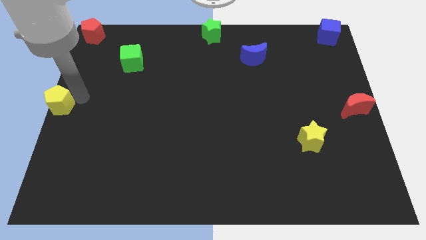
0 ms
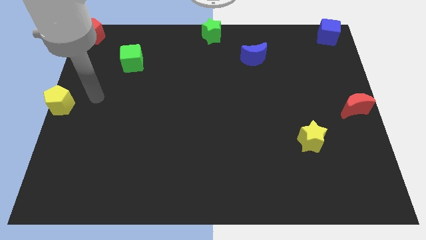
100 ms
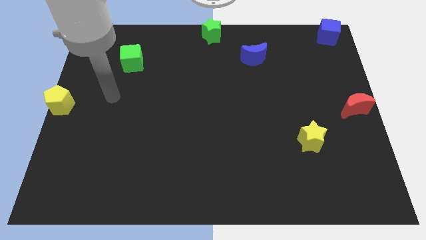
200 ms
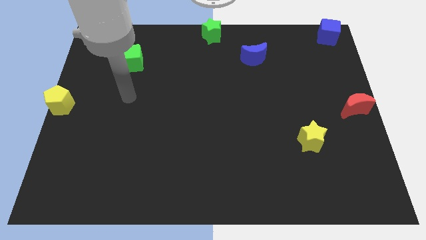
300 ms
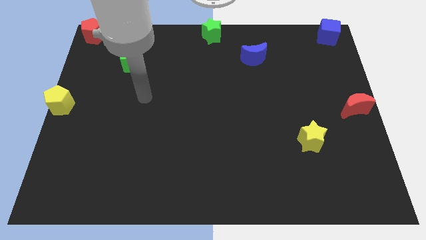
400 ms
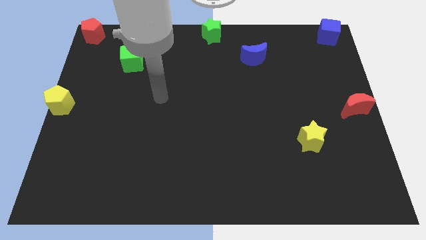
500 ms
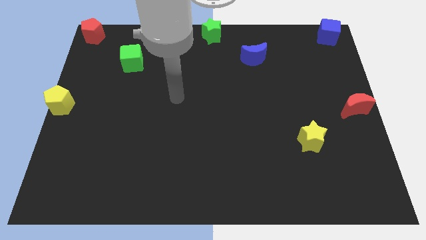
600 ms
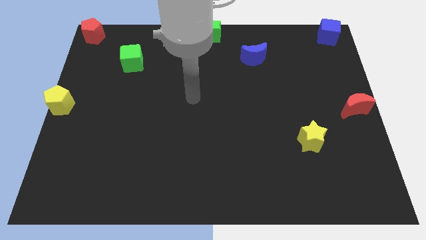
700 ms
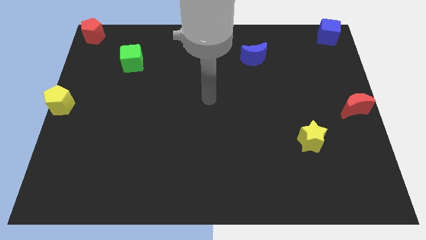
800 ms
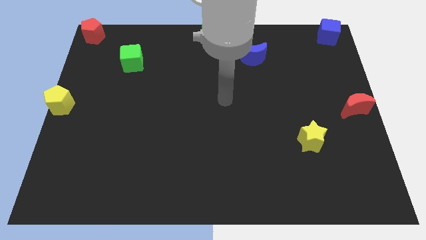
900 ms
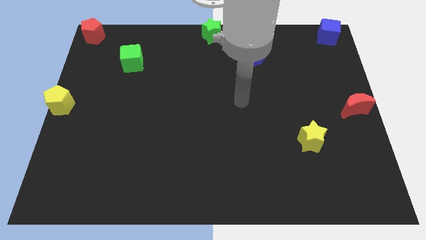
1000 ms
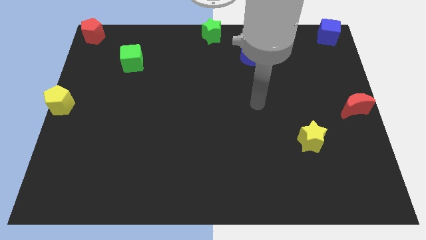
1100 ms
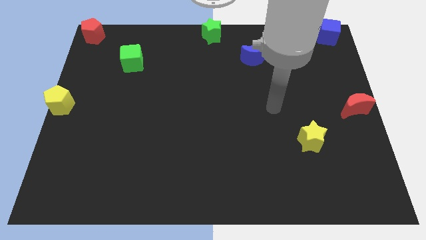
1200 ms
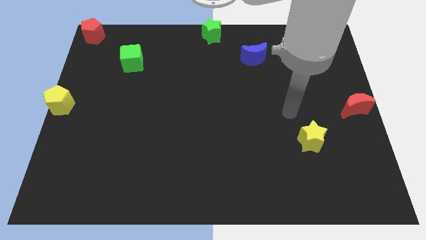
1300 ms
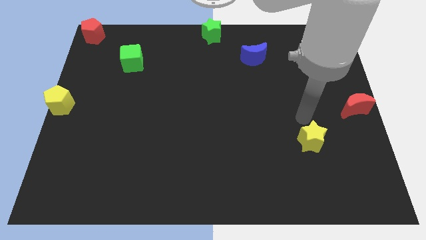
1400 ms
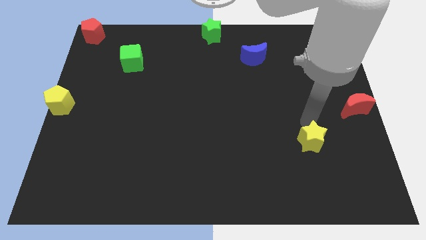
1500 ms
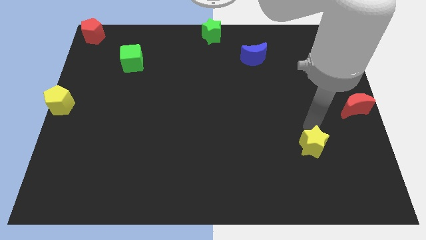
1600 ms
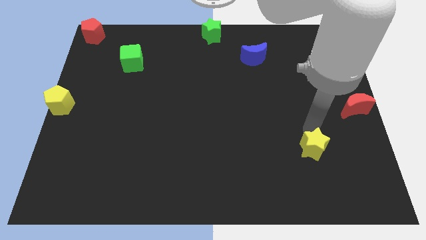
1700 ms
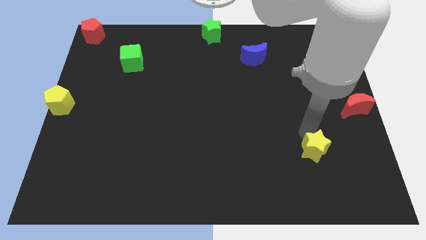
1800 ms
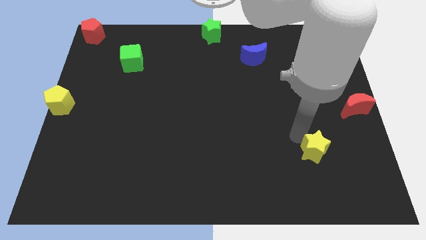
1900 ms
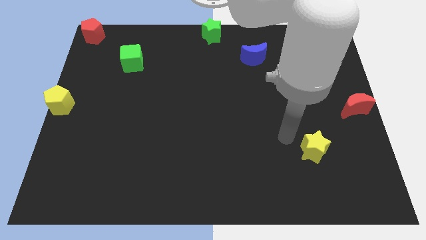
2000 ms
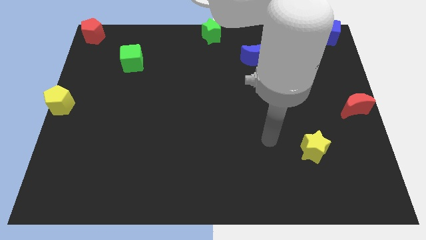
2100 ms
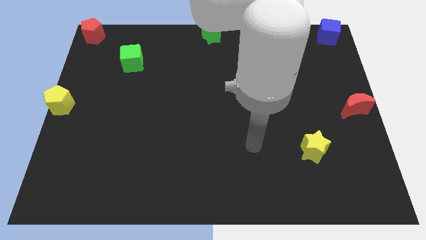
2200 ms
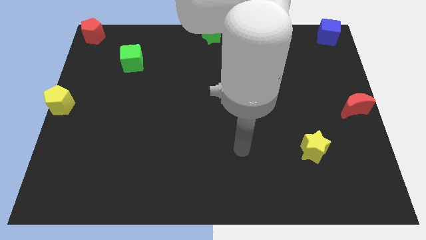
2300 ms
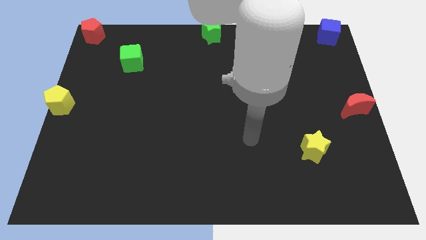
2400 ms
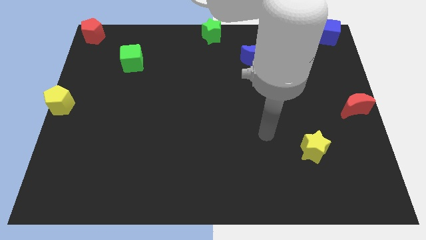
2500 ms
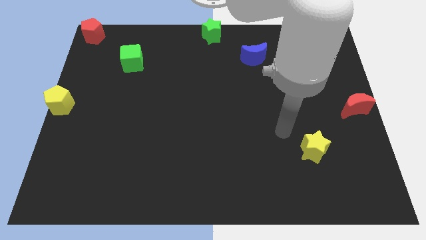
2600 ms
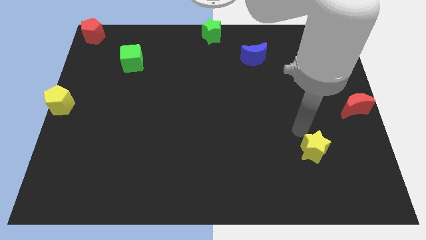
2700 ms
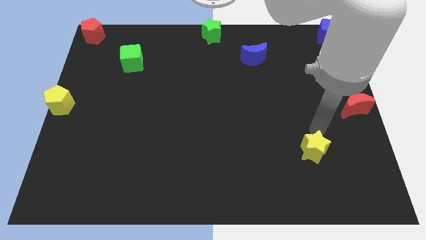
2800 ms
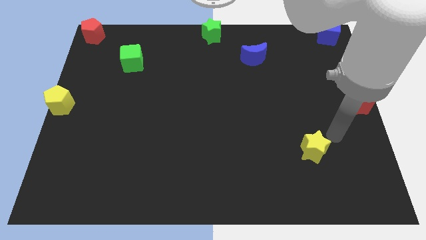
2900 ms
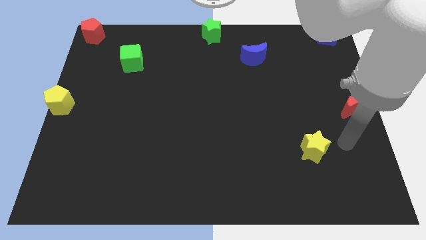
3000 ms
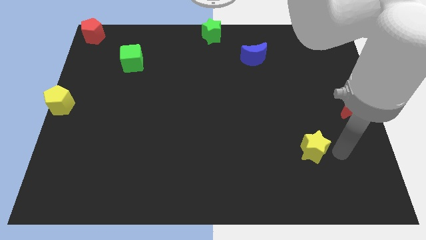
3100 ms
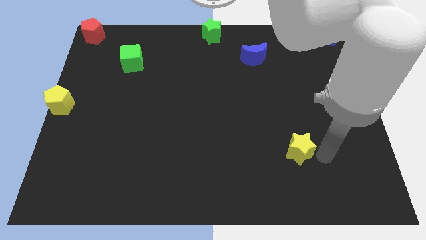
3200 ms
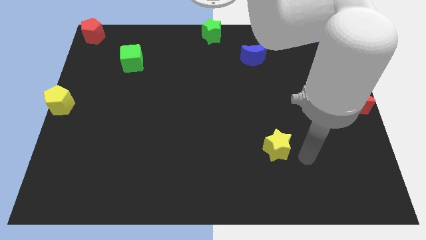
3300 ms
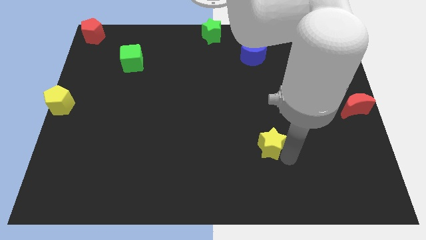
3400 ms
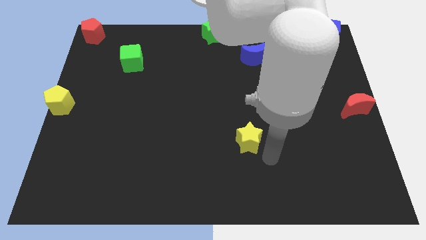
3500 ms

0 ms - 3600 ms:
place the yellow star diagonally to red moon

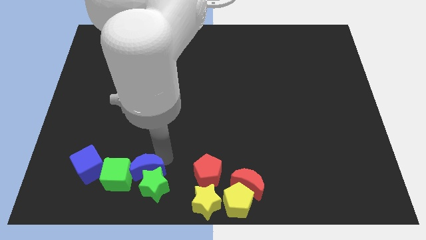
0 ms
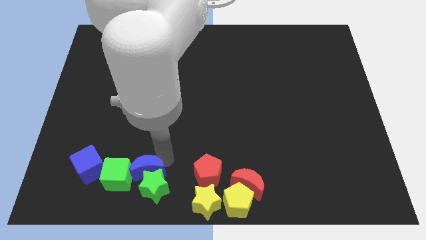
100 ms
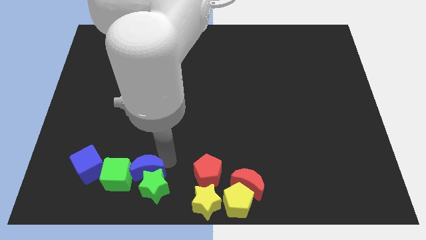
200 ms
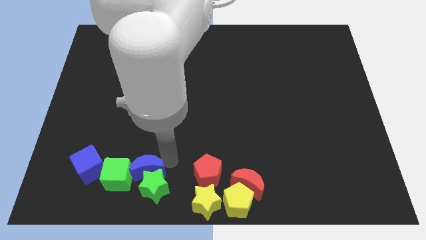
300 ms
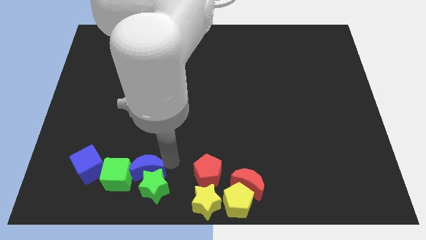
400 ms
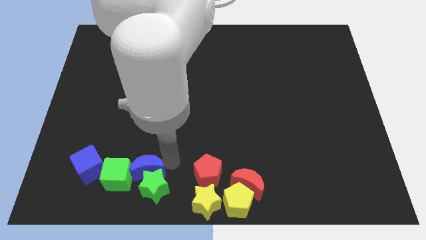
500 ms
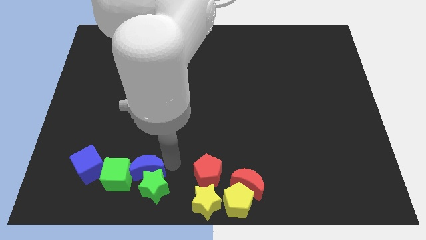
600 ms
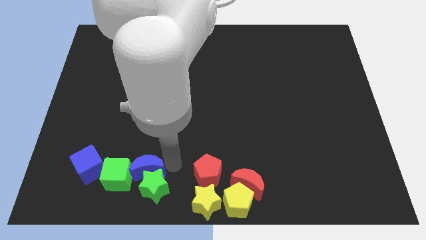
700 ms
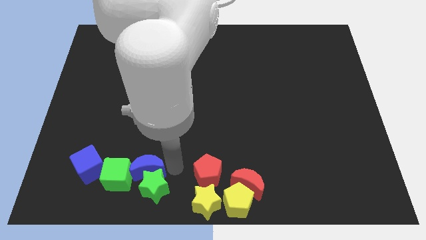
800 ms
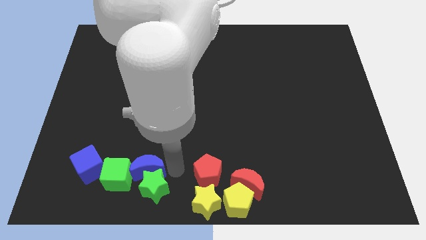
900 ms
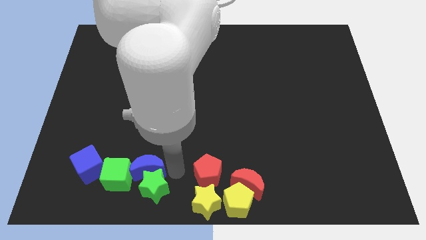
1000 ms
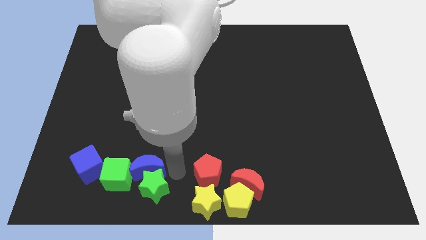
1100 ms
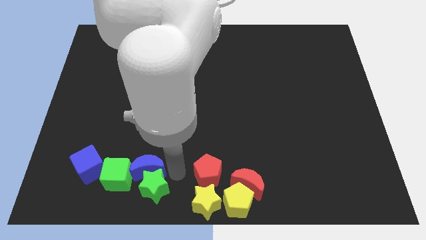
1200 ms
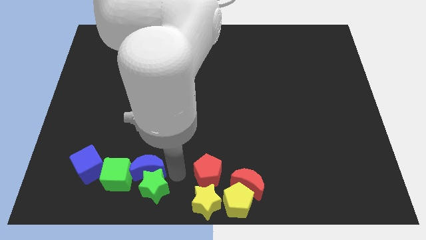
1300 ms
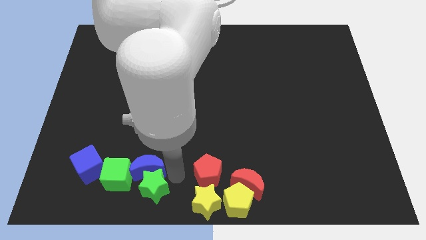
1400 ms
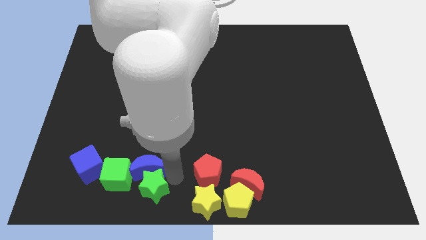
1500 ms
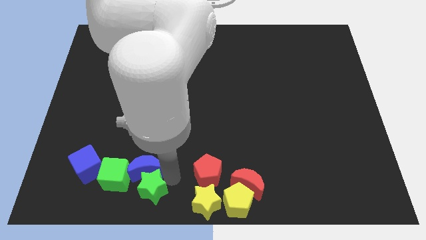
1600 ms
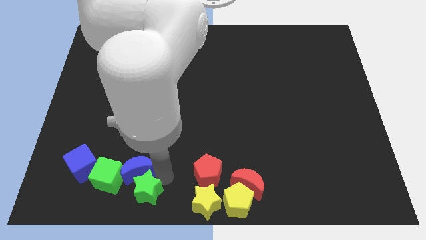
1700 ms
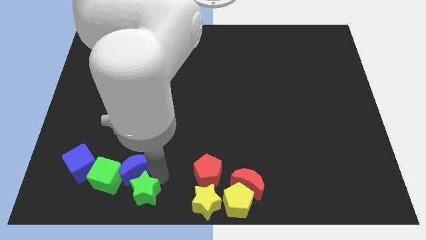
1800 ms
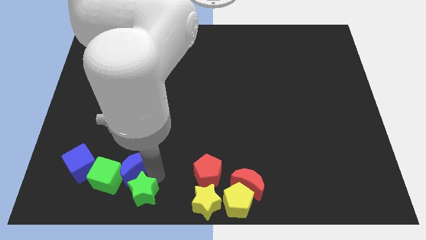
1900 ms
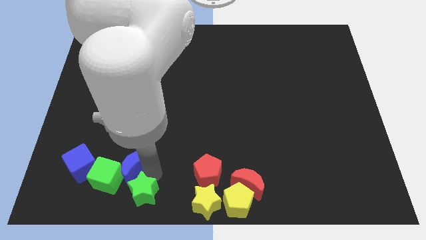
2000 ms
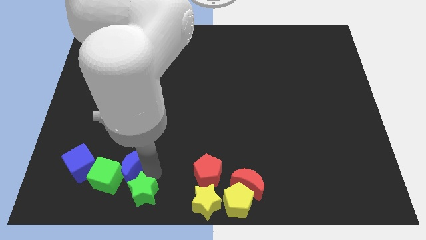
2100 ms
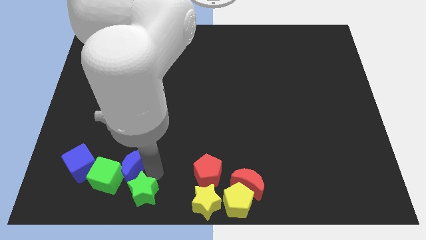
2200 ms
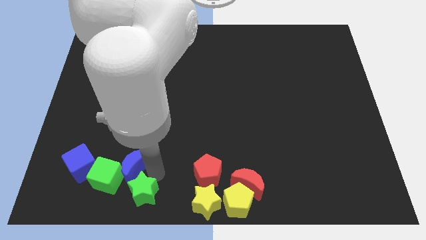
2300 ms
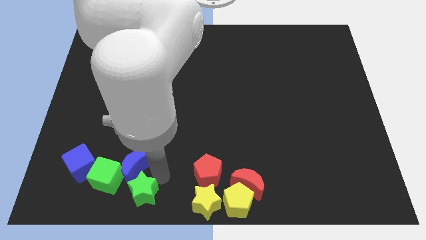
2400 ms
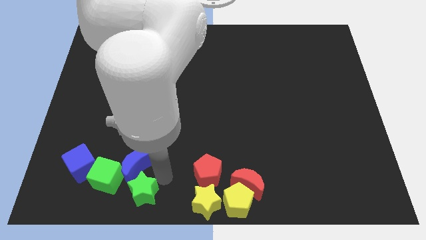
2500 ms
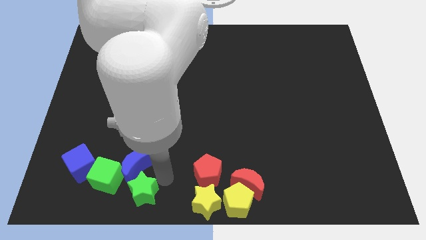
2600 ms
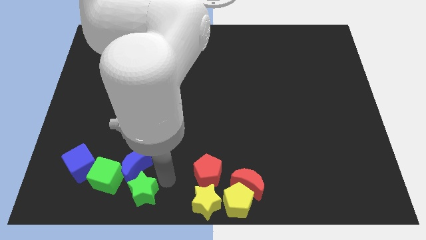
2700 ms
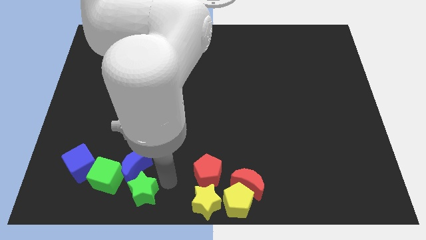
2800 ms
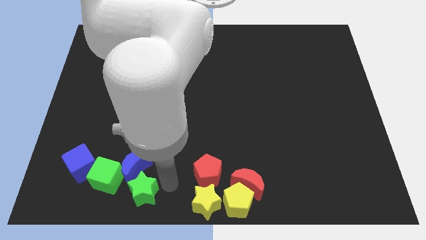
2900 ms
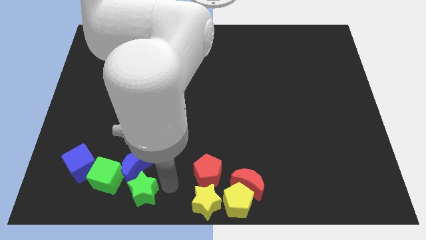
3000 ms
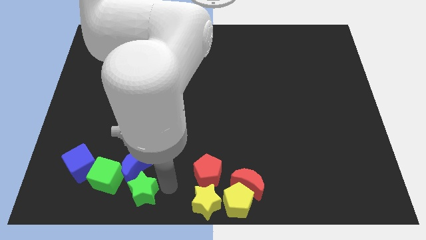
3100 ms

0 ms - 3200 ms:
slightly move the blue moon and green star towards left side

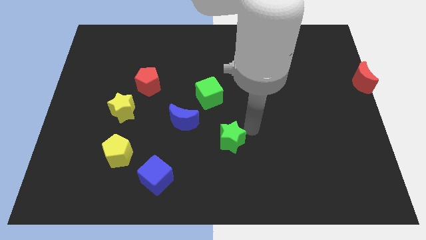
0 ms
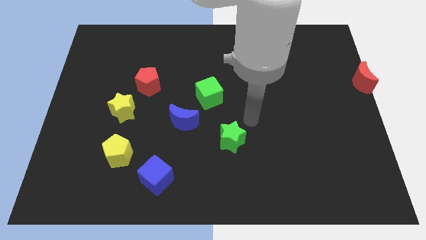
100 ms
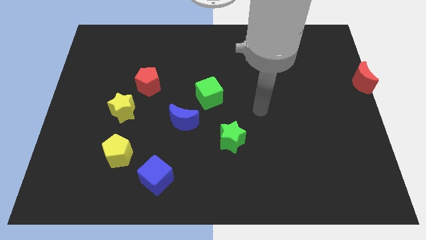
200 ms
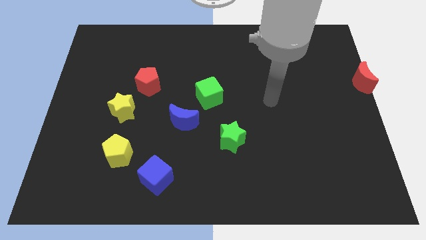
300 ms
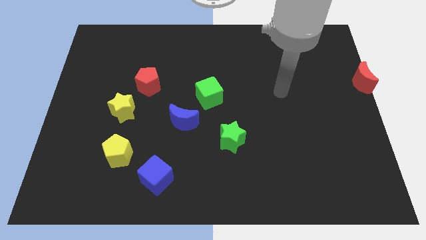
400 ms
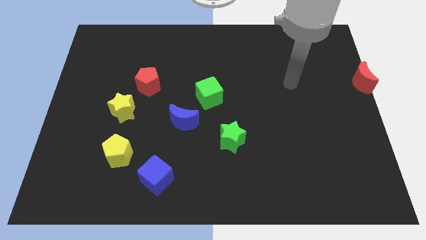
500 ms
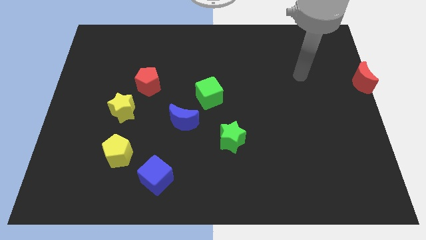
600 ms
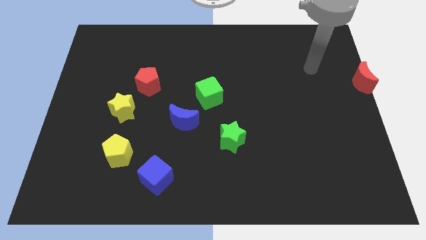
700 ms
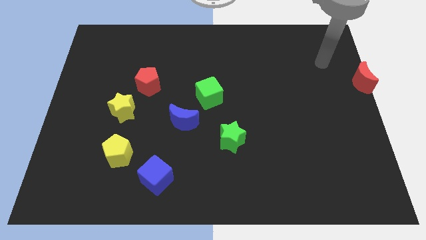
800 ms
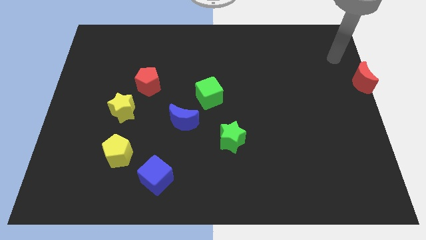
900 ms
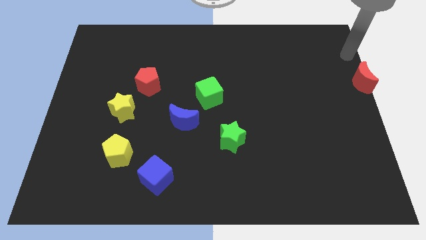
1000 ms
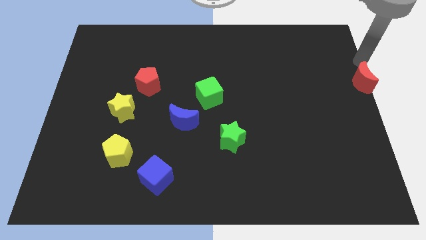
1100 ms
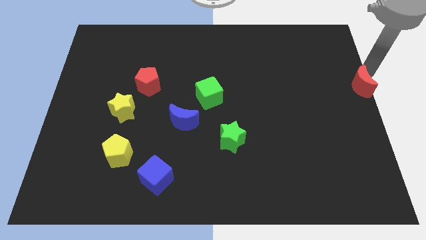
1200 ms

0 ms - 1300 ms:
move arm to the red moon

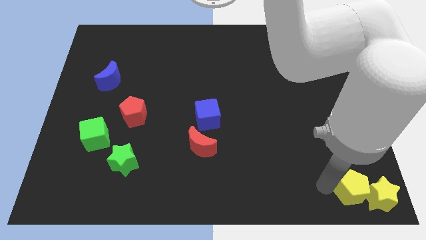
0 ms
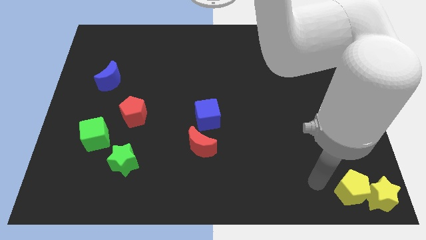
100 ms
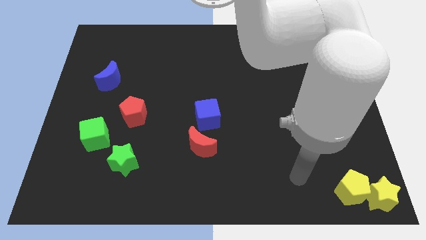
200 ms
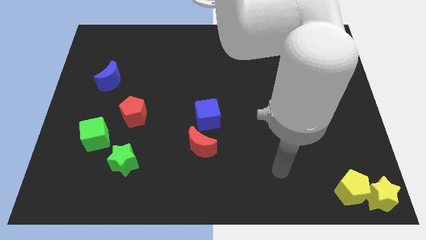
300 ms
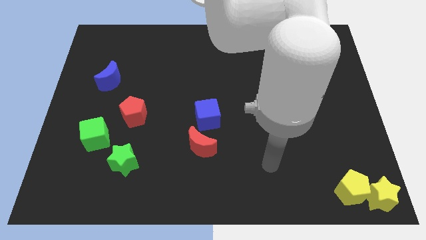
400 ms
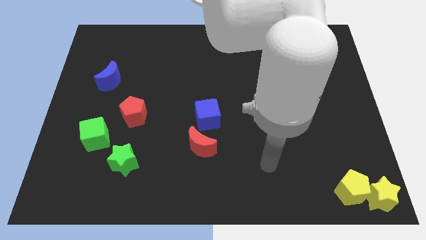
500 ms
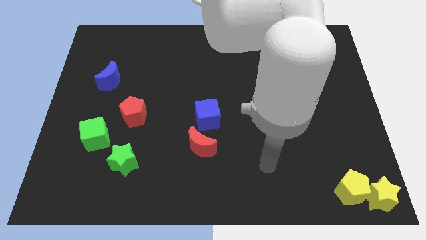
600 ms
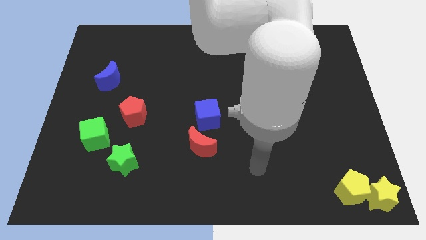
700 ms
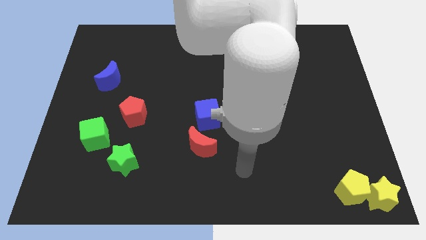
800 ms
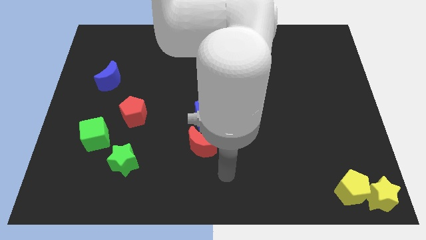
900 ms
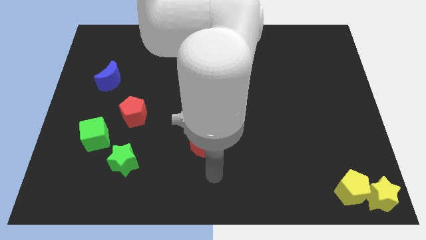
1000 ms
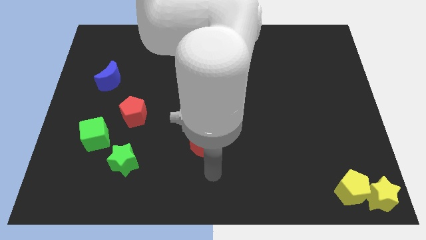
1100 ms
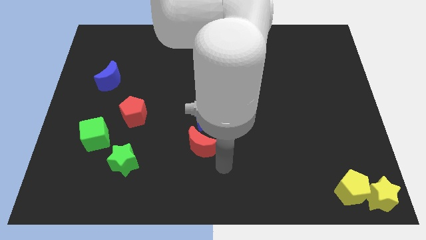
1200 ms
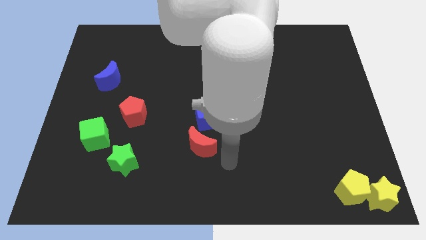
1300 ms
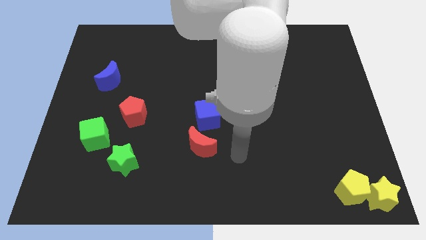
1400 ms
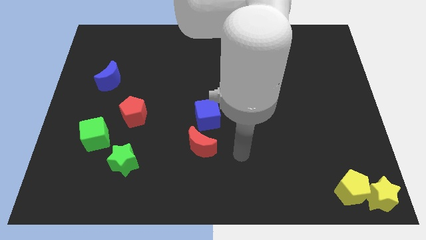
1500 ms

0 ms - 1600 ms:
move your arm away from the yellow star
